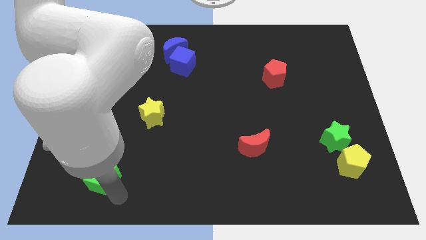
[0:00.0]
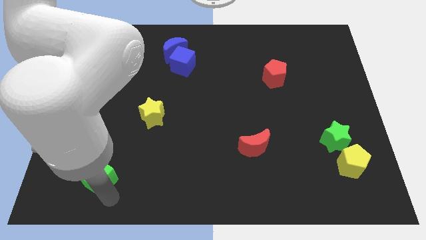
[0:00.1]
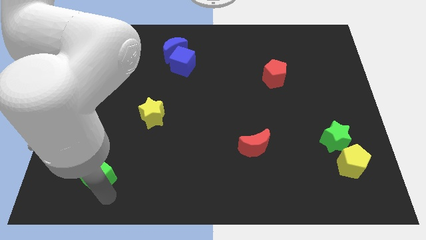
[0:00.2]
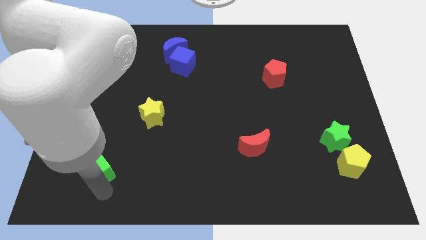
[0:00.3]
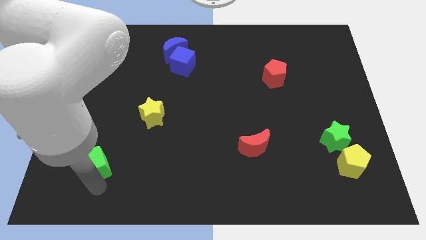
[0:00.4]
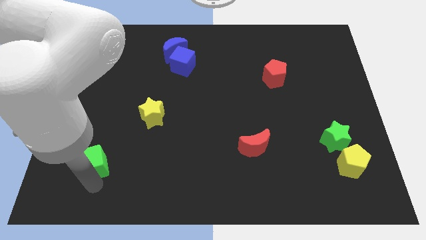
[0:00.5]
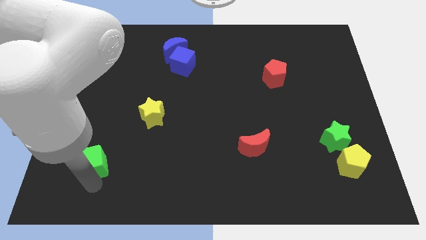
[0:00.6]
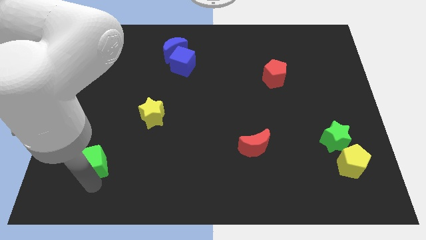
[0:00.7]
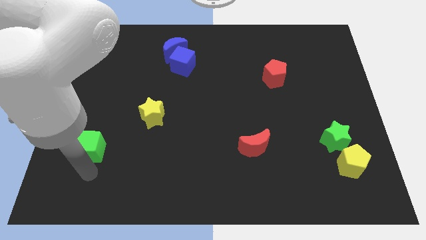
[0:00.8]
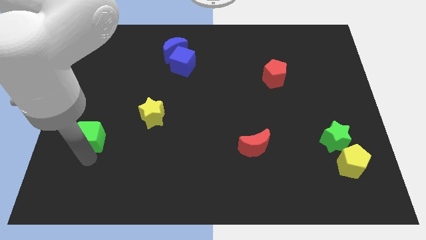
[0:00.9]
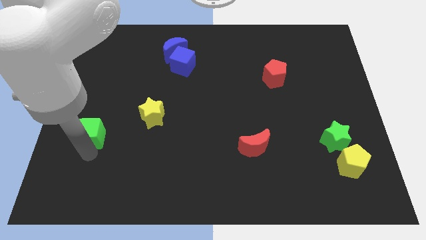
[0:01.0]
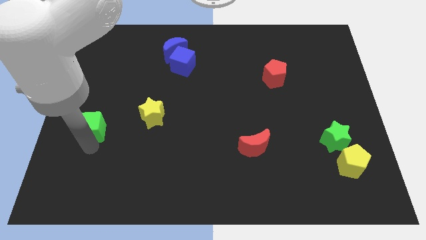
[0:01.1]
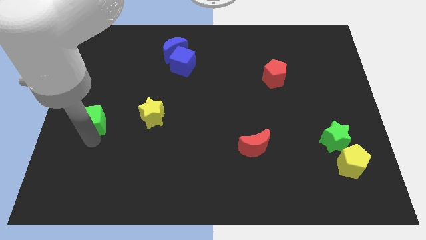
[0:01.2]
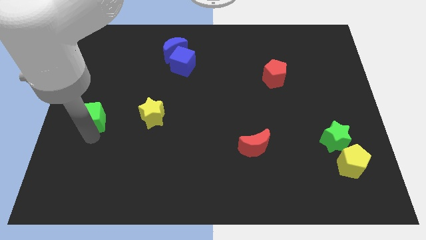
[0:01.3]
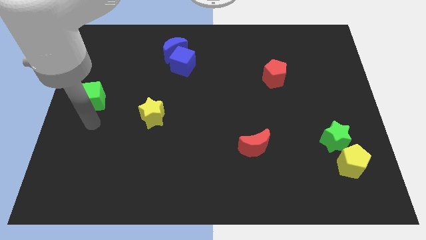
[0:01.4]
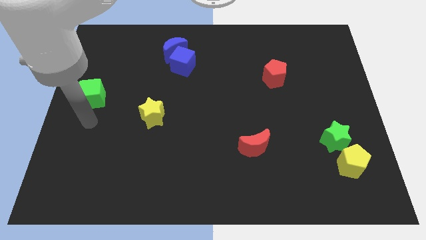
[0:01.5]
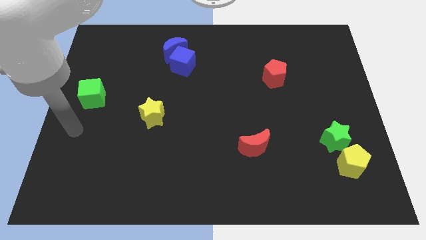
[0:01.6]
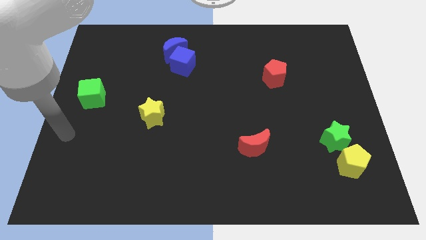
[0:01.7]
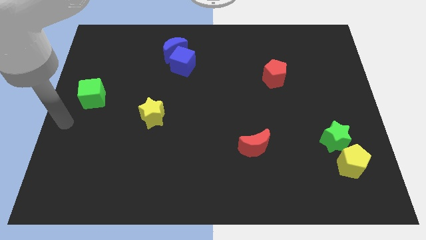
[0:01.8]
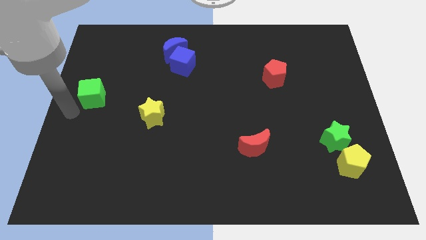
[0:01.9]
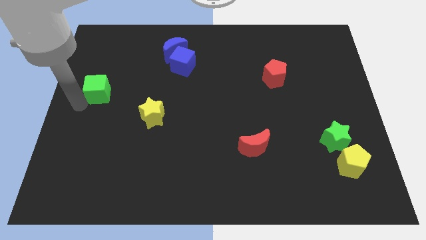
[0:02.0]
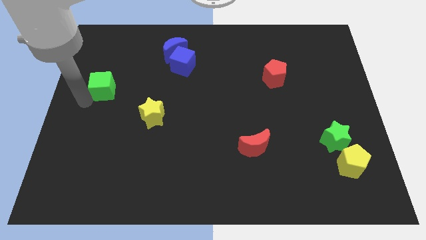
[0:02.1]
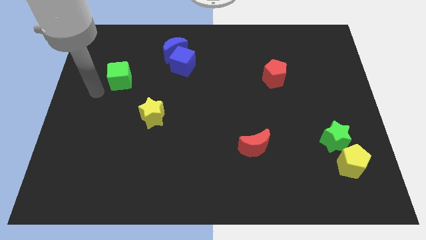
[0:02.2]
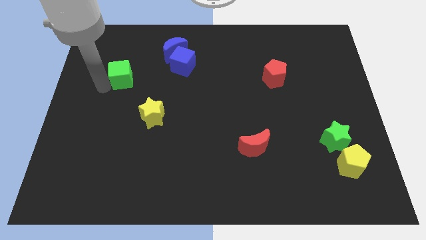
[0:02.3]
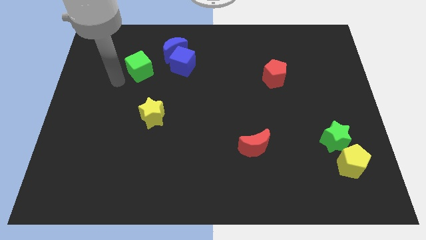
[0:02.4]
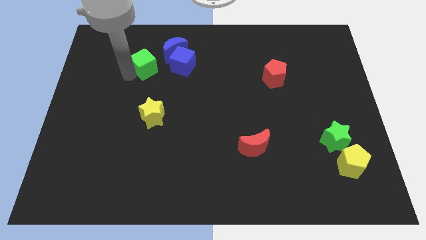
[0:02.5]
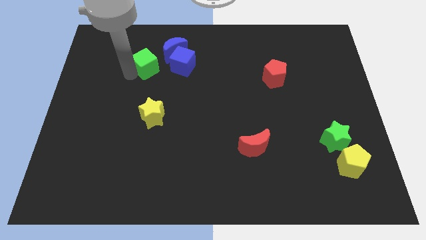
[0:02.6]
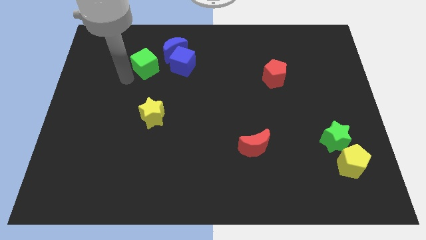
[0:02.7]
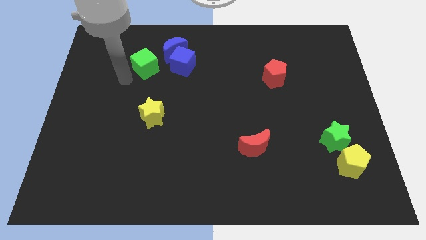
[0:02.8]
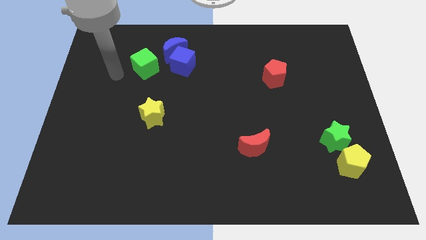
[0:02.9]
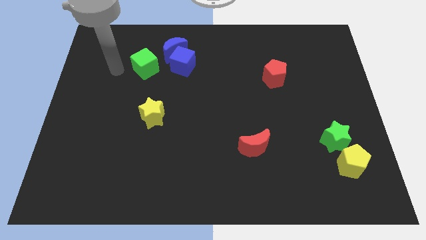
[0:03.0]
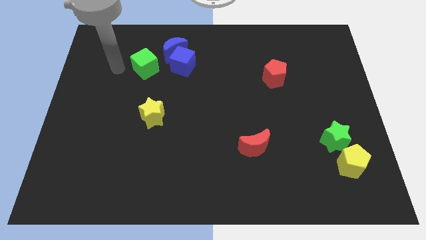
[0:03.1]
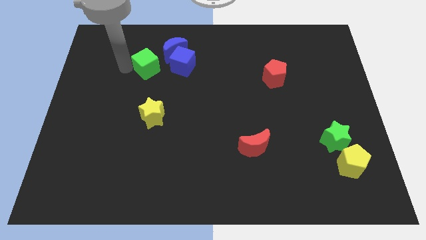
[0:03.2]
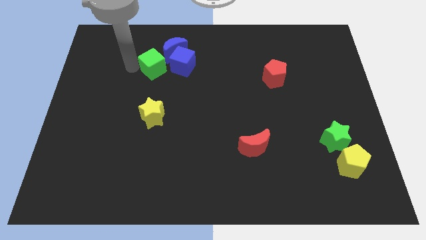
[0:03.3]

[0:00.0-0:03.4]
push green cube towards blue cube

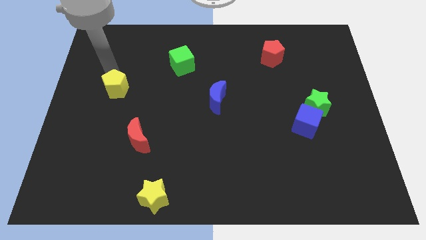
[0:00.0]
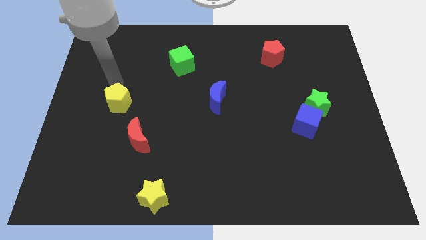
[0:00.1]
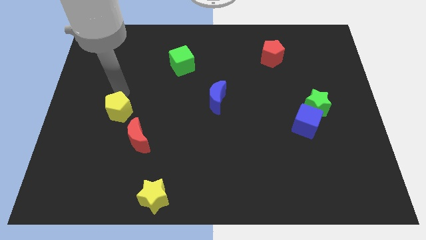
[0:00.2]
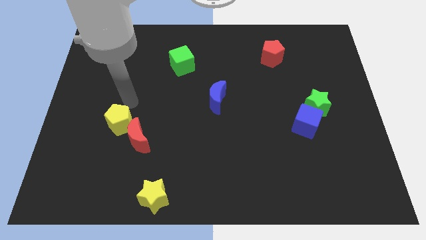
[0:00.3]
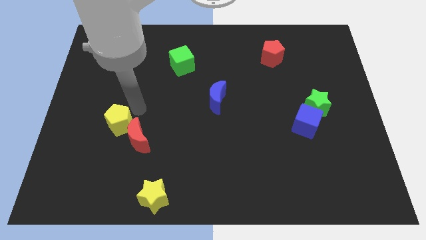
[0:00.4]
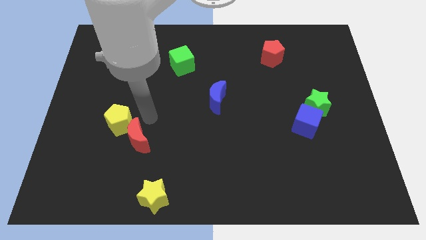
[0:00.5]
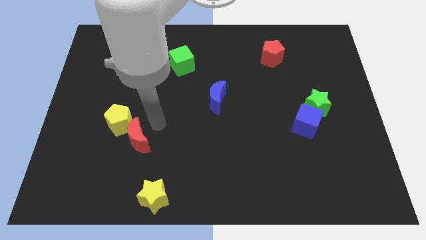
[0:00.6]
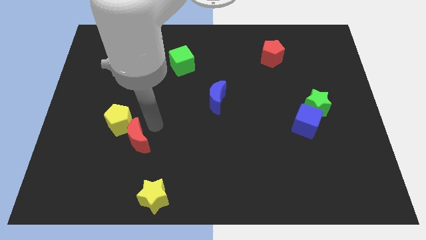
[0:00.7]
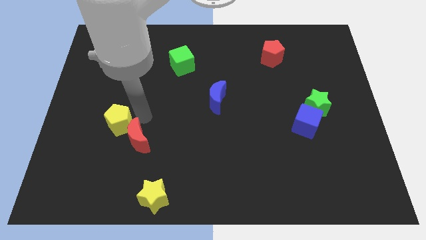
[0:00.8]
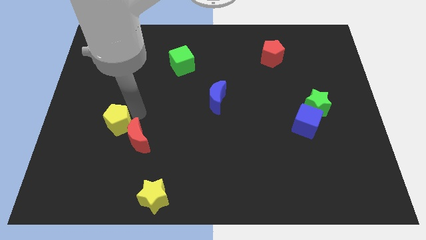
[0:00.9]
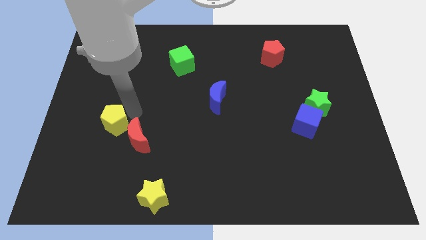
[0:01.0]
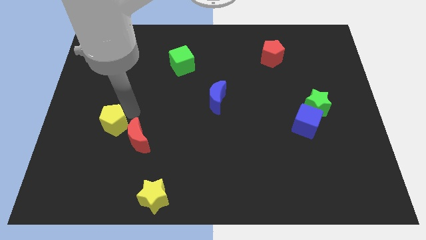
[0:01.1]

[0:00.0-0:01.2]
move yellow pentagon left above the red moon

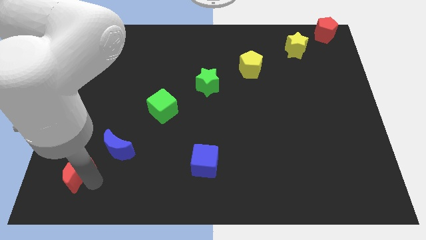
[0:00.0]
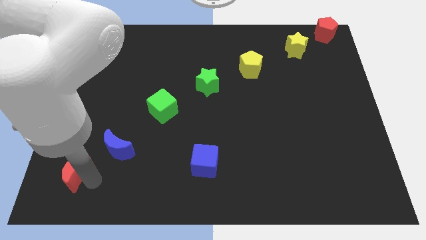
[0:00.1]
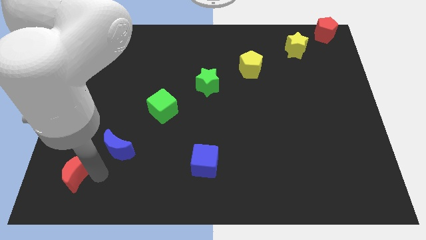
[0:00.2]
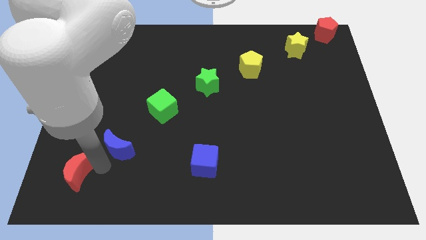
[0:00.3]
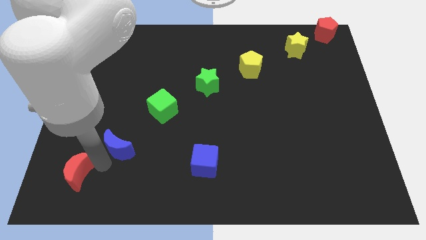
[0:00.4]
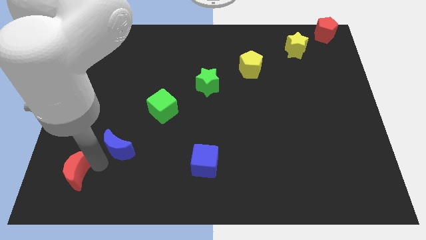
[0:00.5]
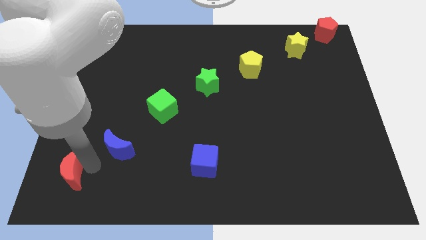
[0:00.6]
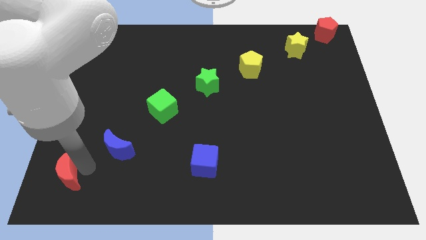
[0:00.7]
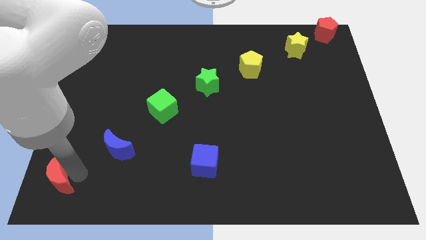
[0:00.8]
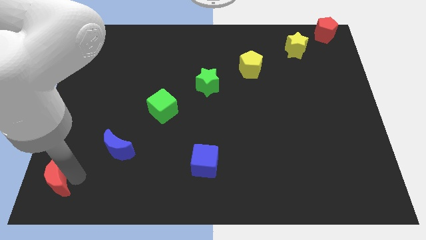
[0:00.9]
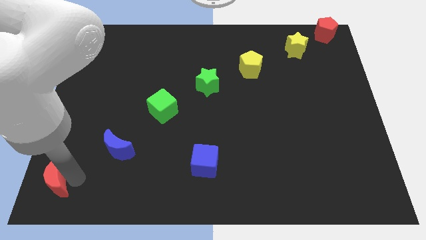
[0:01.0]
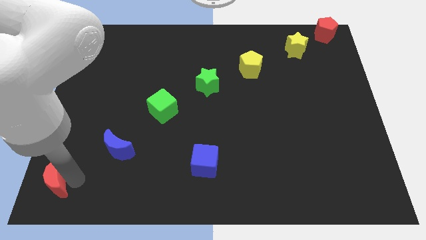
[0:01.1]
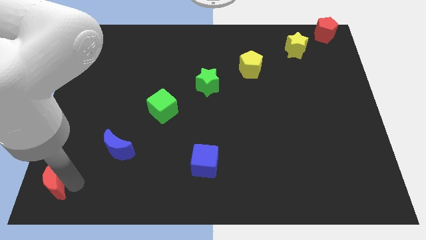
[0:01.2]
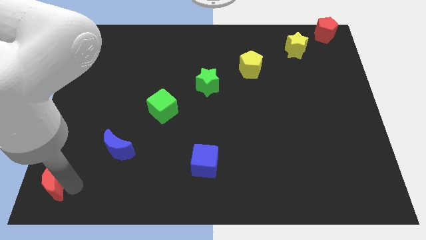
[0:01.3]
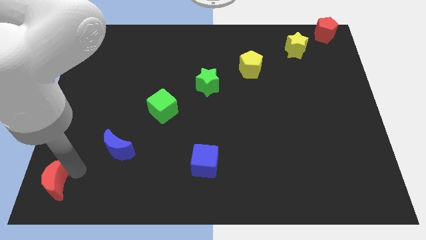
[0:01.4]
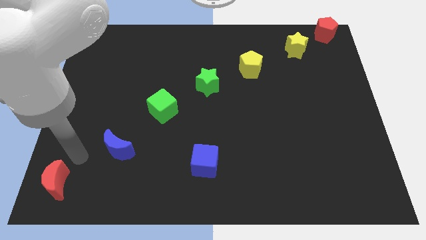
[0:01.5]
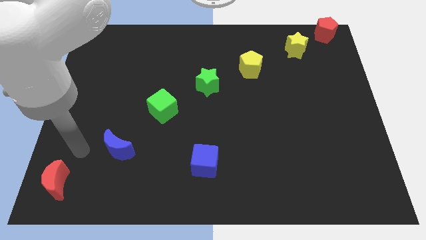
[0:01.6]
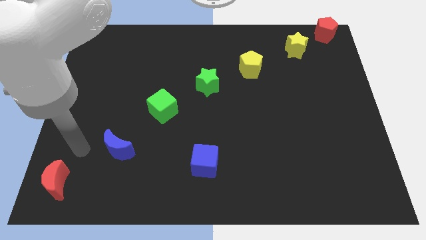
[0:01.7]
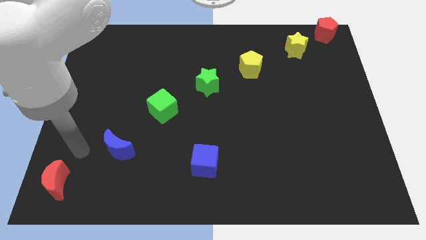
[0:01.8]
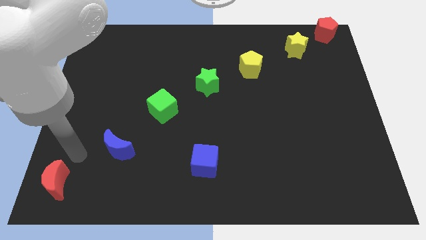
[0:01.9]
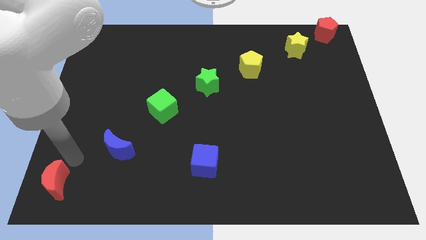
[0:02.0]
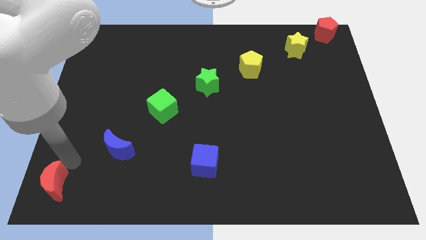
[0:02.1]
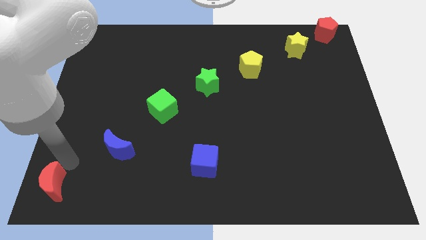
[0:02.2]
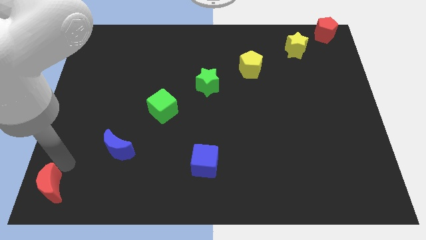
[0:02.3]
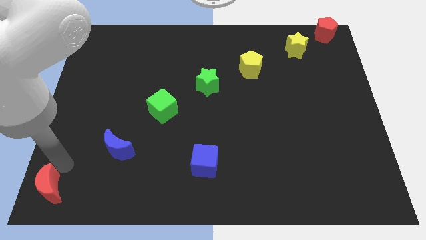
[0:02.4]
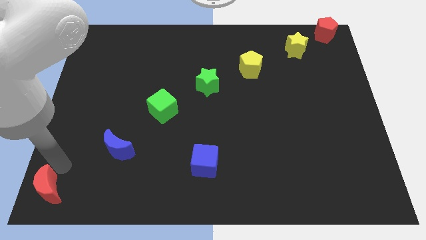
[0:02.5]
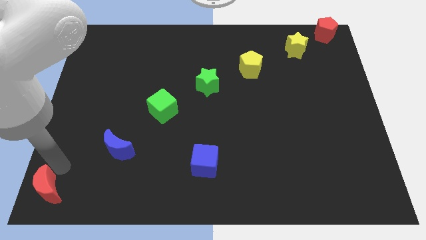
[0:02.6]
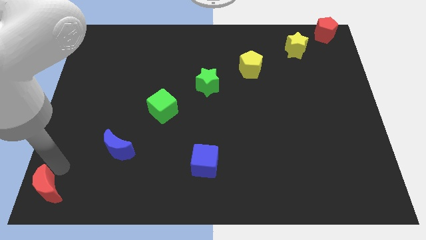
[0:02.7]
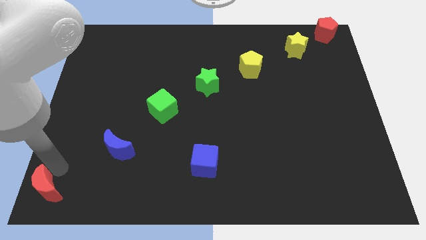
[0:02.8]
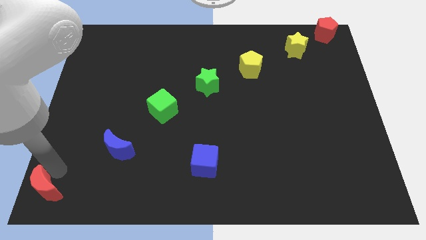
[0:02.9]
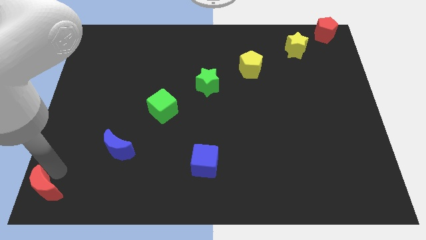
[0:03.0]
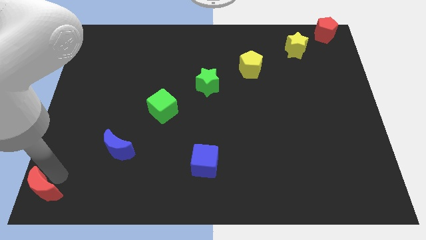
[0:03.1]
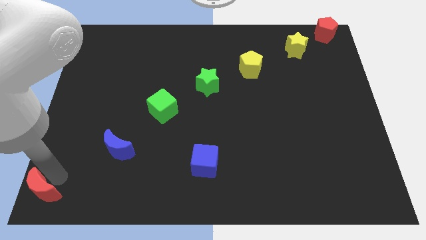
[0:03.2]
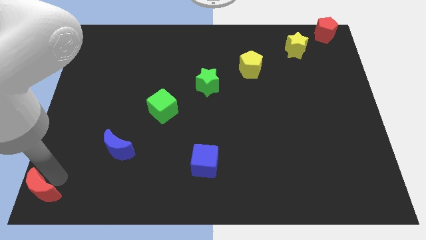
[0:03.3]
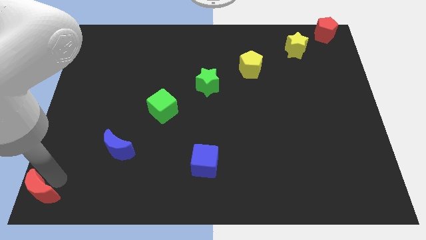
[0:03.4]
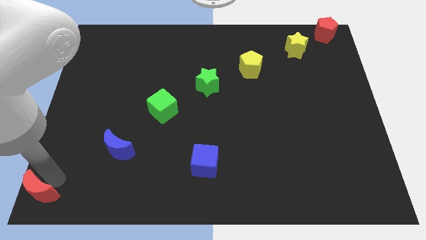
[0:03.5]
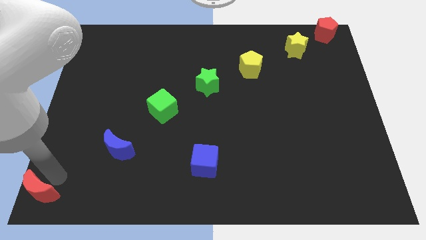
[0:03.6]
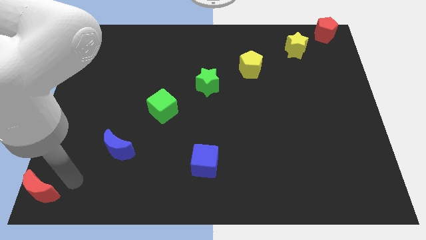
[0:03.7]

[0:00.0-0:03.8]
put the red crescent to the bottom left corner of the board

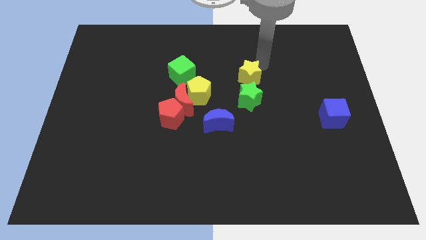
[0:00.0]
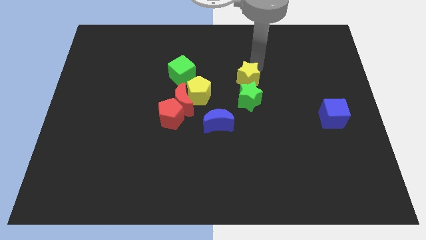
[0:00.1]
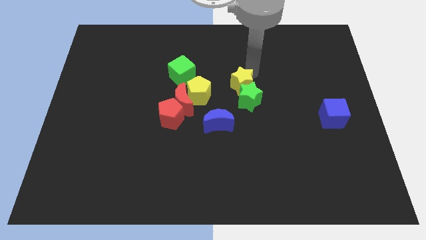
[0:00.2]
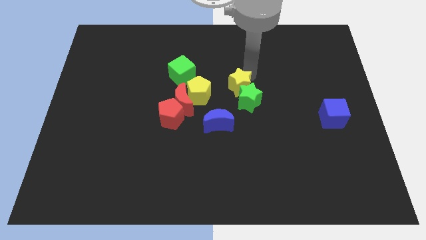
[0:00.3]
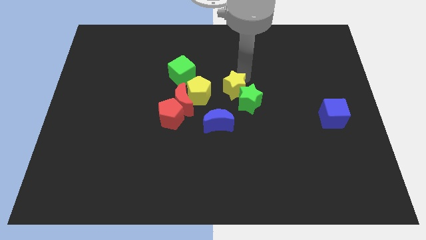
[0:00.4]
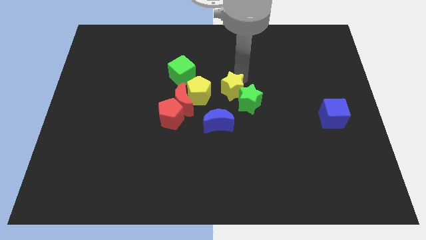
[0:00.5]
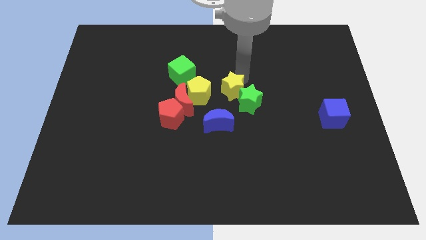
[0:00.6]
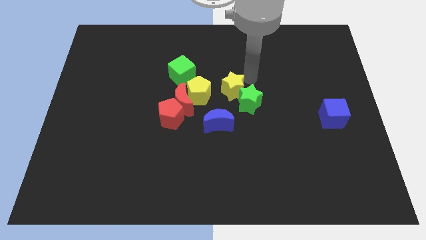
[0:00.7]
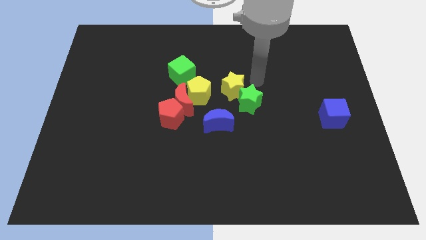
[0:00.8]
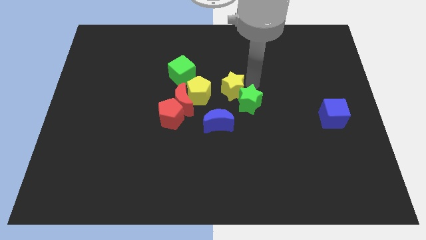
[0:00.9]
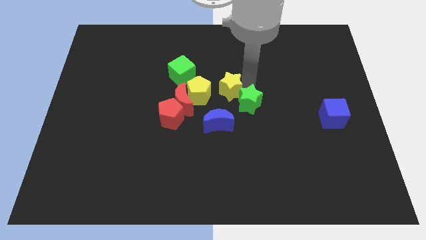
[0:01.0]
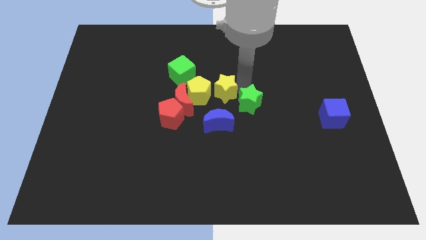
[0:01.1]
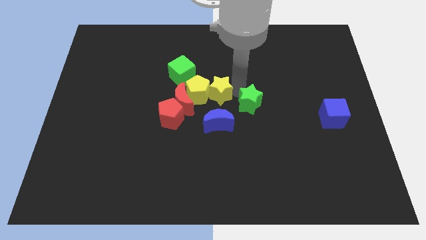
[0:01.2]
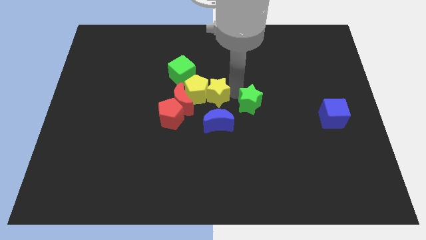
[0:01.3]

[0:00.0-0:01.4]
move the yellow star to the center of the board
